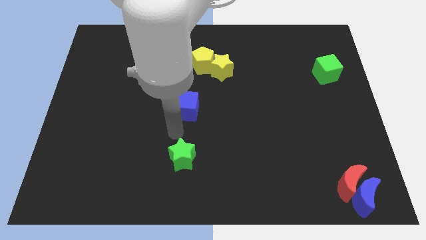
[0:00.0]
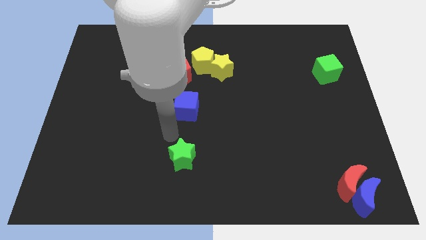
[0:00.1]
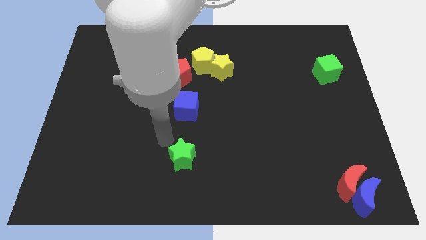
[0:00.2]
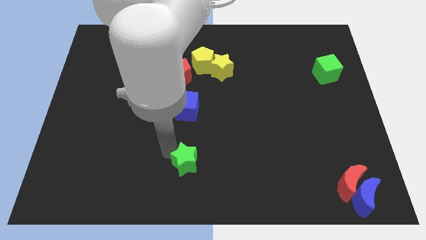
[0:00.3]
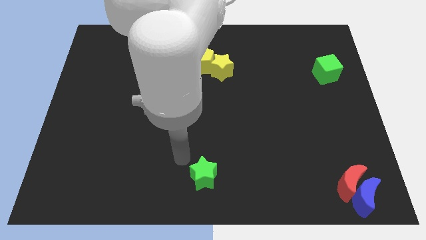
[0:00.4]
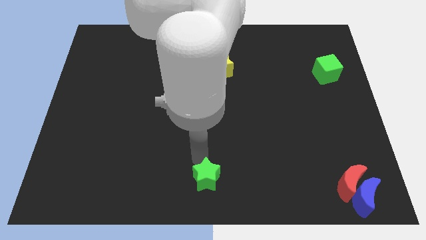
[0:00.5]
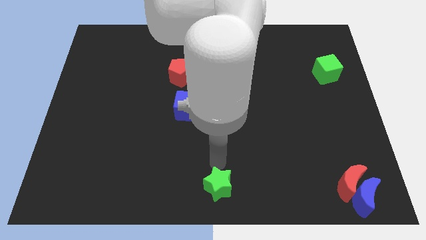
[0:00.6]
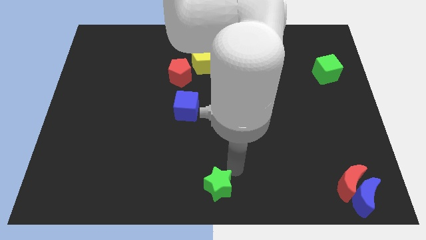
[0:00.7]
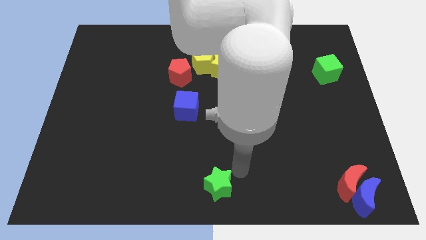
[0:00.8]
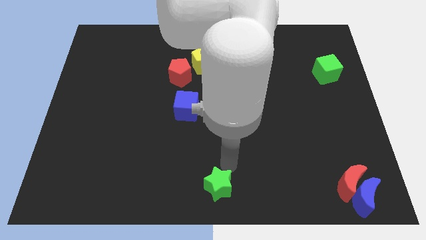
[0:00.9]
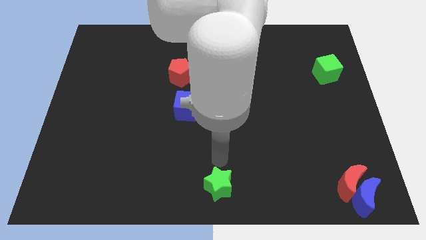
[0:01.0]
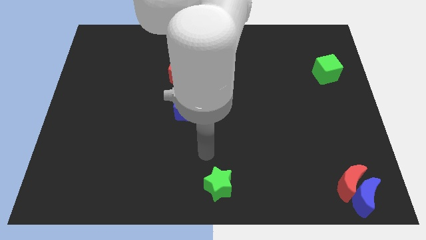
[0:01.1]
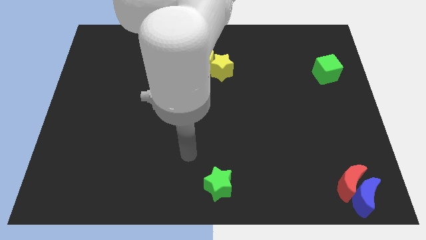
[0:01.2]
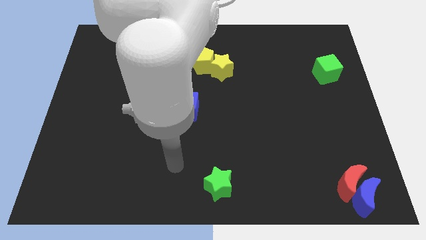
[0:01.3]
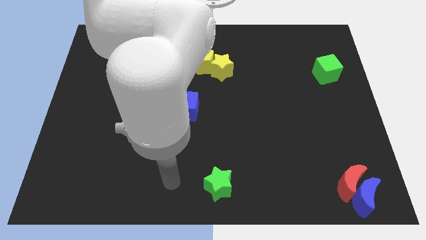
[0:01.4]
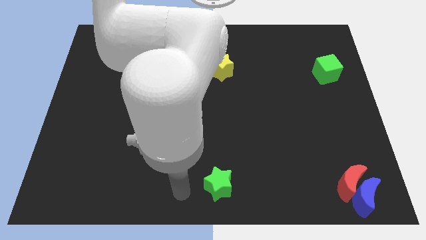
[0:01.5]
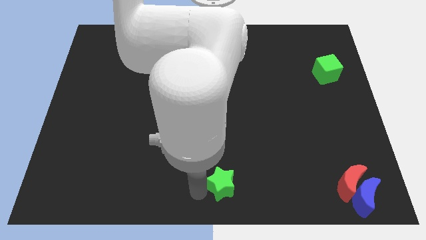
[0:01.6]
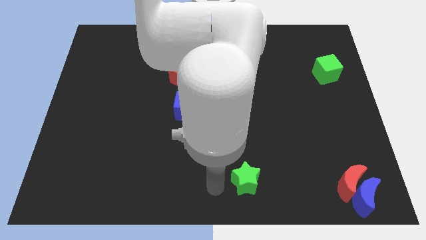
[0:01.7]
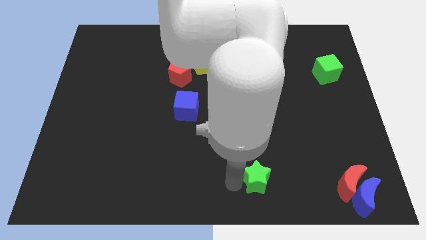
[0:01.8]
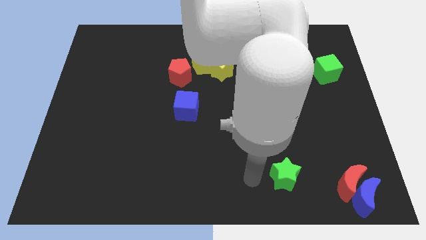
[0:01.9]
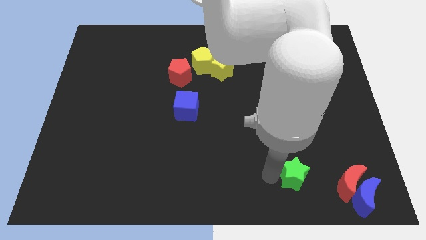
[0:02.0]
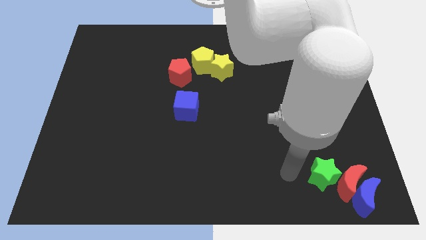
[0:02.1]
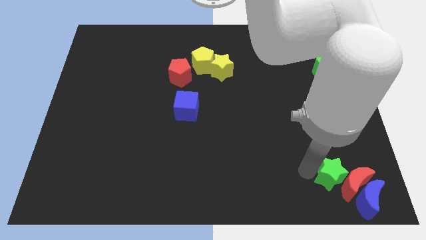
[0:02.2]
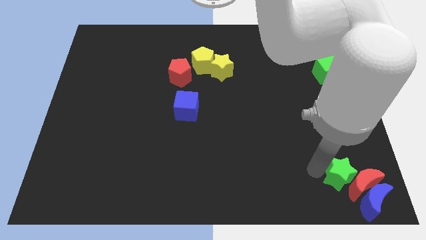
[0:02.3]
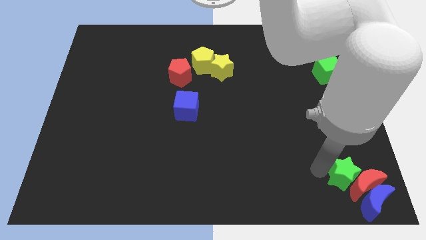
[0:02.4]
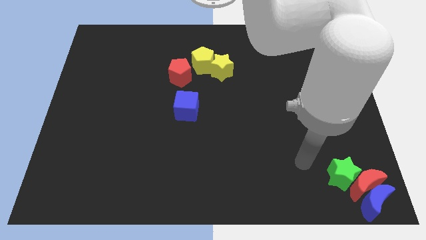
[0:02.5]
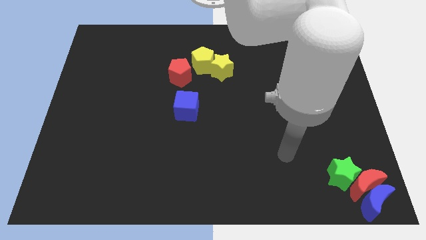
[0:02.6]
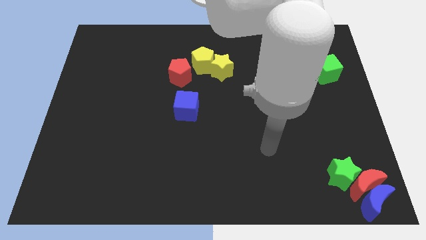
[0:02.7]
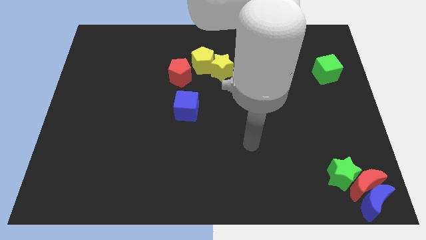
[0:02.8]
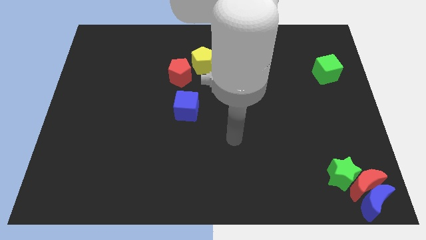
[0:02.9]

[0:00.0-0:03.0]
put the green star red crescent and blue semicircle together

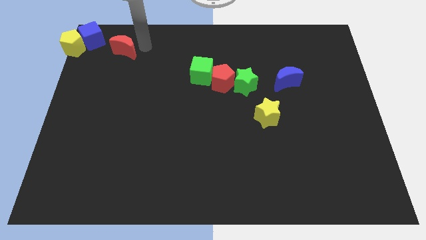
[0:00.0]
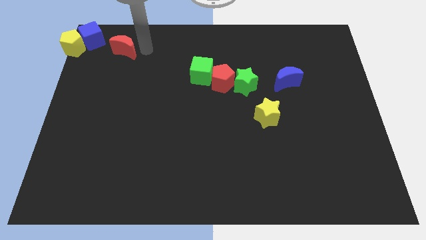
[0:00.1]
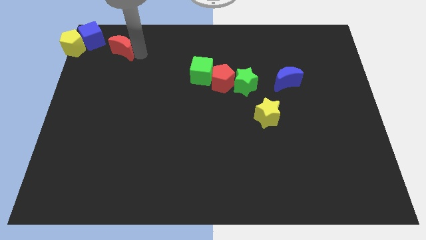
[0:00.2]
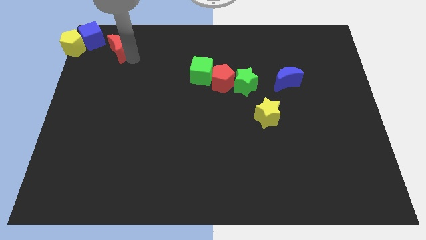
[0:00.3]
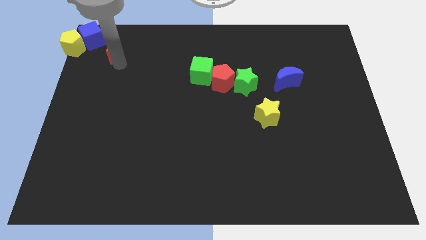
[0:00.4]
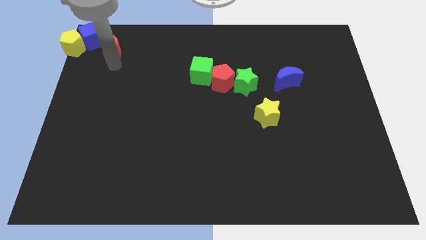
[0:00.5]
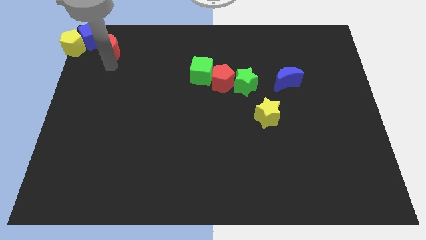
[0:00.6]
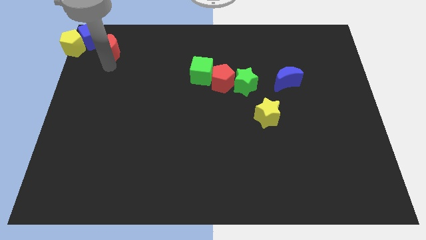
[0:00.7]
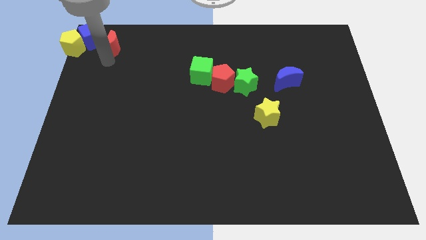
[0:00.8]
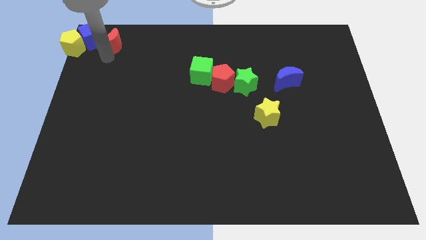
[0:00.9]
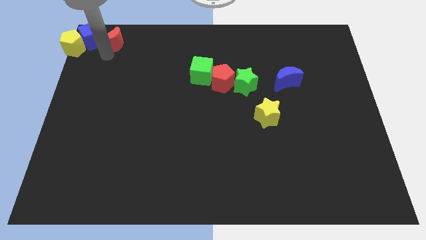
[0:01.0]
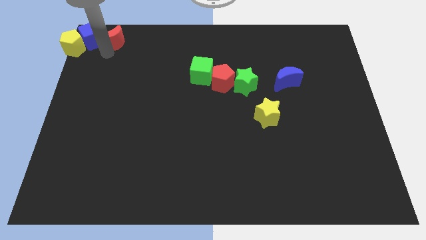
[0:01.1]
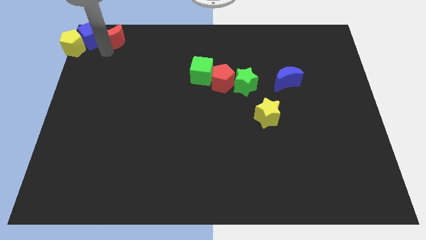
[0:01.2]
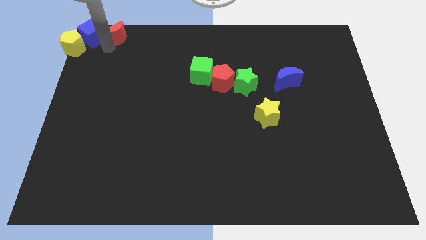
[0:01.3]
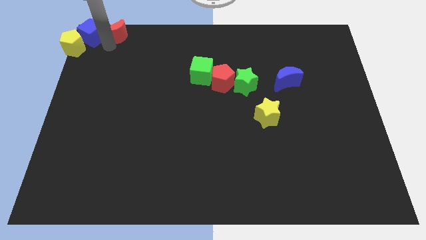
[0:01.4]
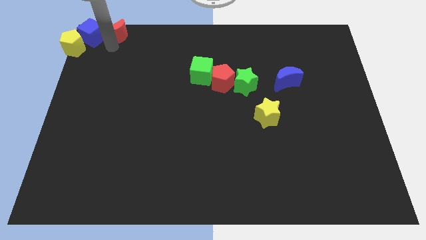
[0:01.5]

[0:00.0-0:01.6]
move the red crescent towards right to the blue cube

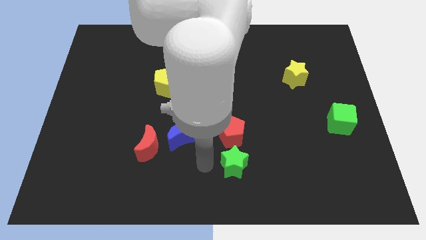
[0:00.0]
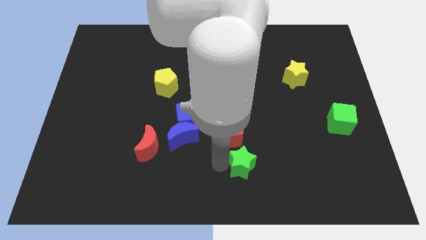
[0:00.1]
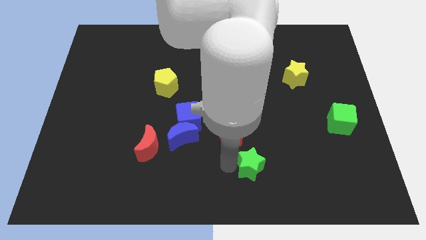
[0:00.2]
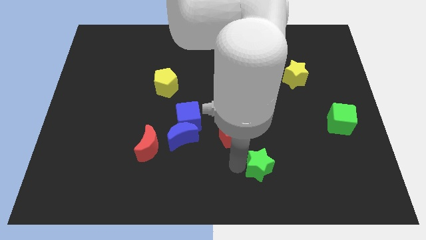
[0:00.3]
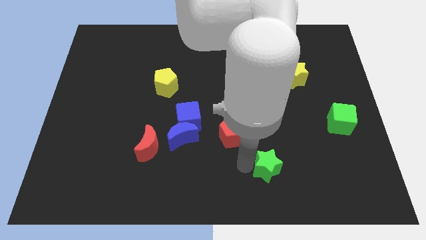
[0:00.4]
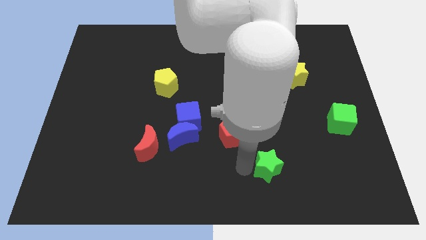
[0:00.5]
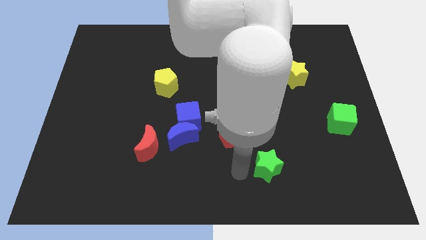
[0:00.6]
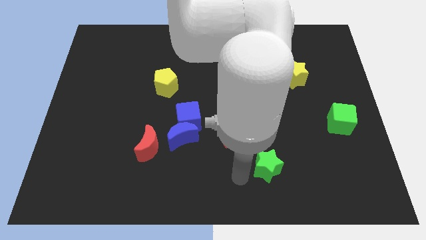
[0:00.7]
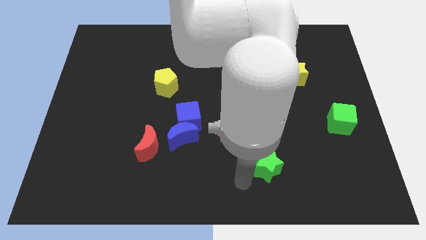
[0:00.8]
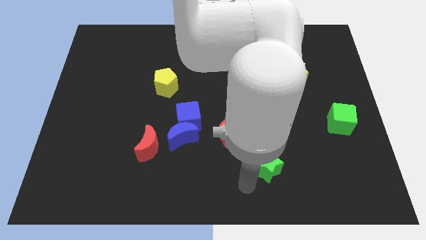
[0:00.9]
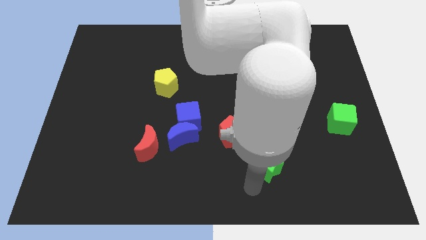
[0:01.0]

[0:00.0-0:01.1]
push green star to the righto of red pentagon

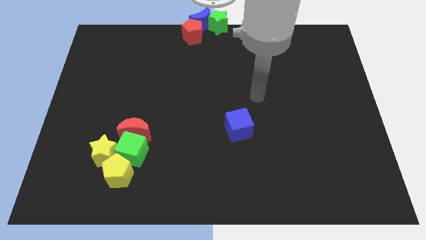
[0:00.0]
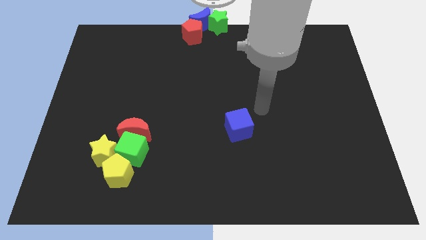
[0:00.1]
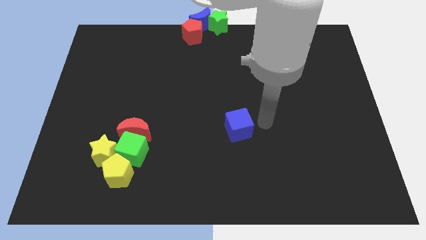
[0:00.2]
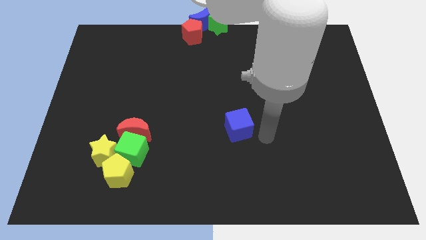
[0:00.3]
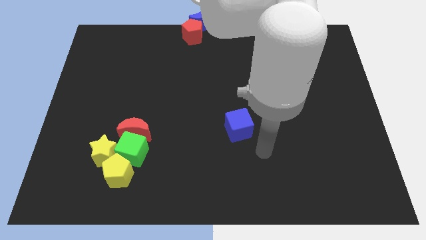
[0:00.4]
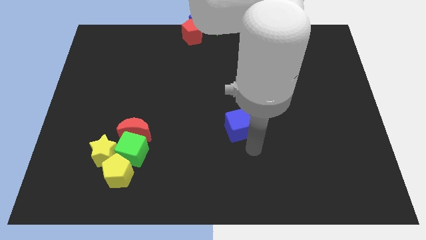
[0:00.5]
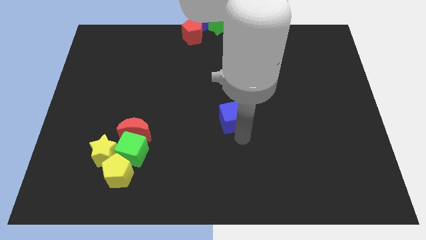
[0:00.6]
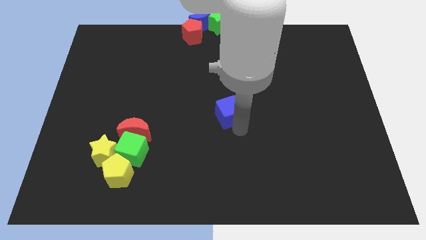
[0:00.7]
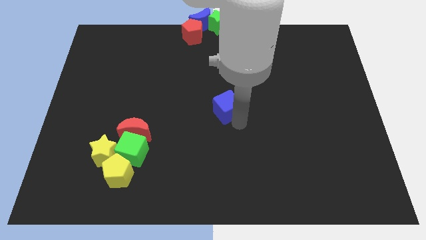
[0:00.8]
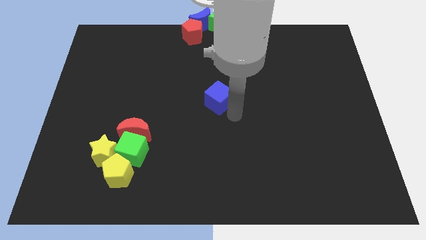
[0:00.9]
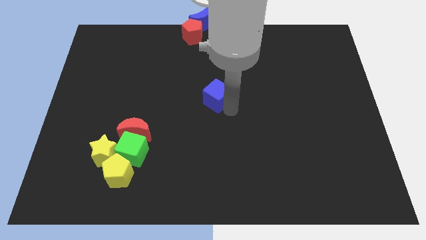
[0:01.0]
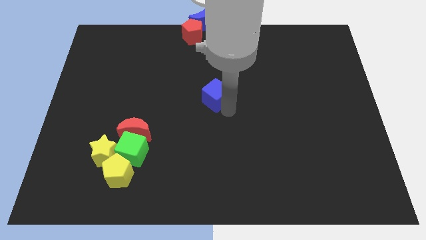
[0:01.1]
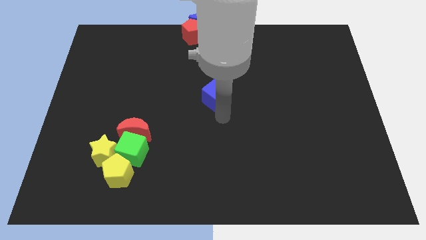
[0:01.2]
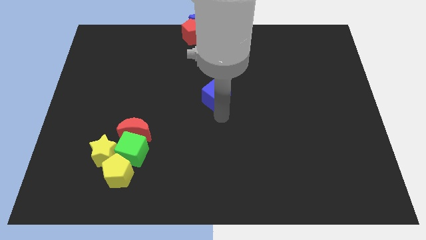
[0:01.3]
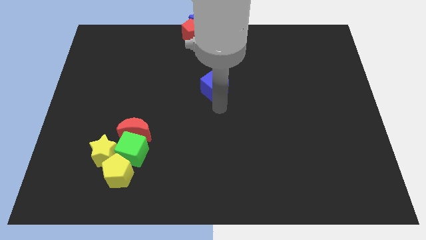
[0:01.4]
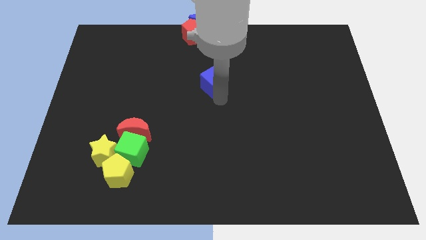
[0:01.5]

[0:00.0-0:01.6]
slide the blue cube towards the top center

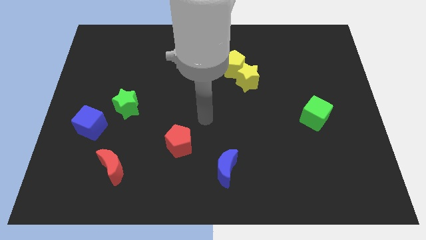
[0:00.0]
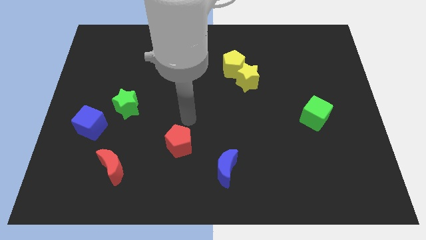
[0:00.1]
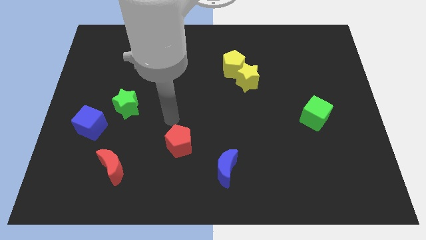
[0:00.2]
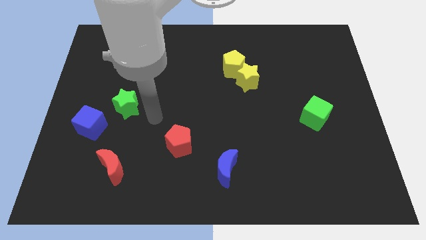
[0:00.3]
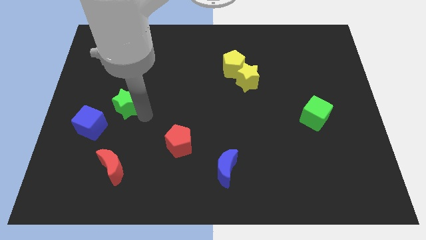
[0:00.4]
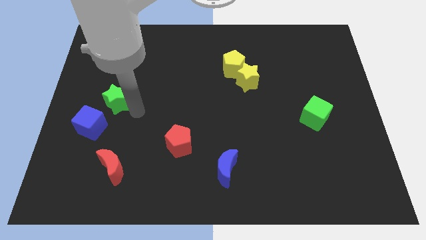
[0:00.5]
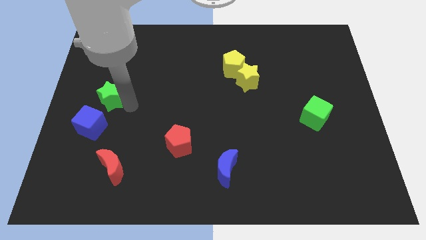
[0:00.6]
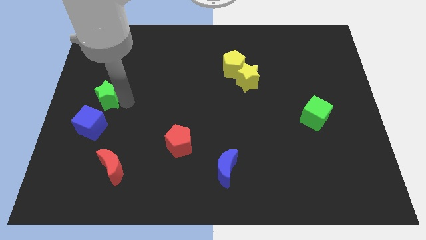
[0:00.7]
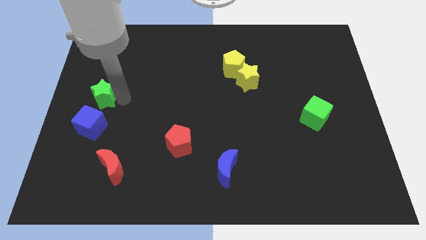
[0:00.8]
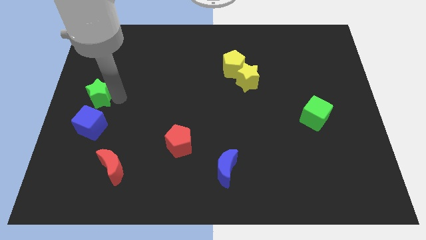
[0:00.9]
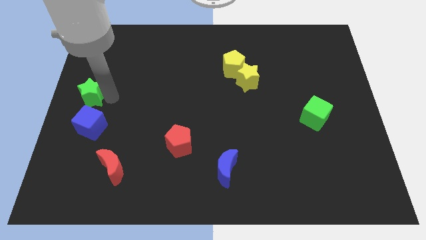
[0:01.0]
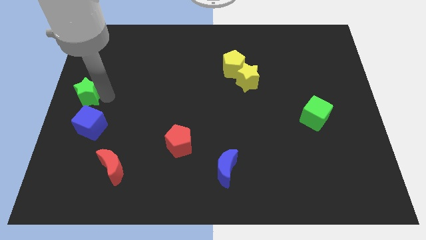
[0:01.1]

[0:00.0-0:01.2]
place green star to the top of blue cube

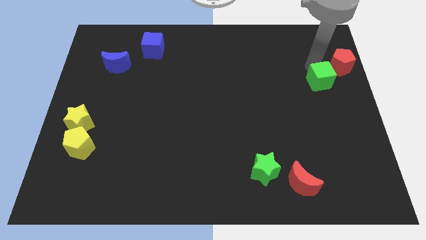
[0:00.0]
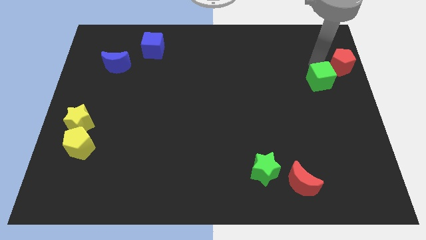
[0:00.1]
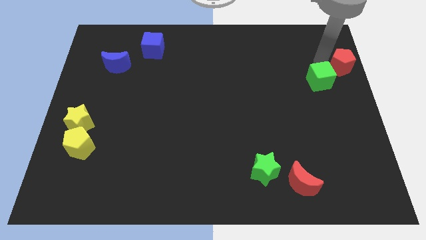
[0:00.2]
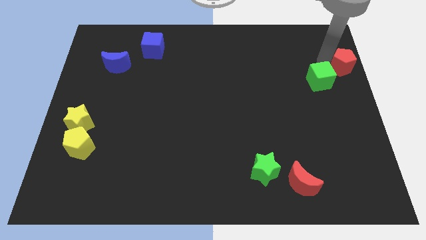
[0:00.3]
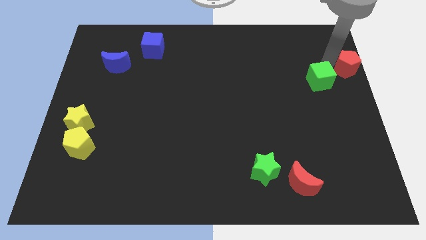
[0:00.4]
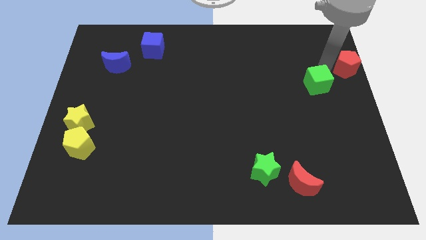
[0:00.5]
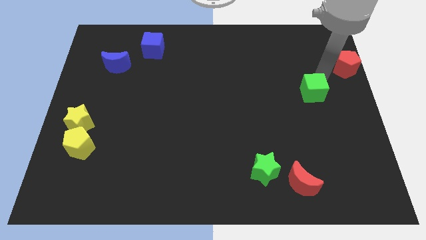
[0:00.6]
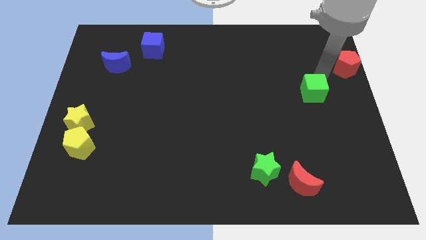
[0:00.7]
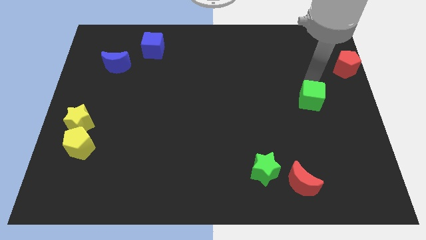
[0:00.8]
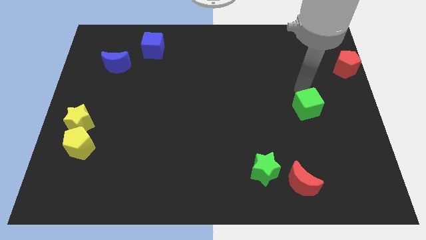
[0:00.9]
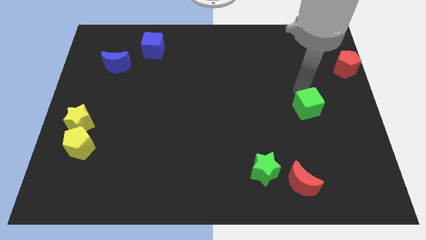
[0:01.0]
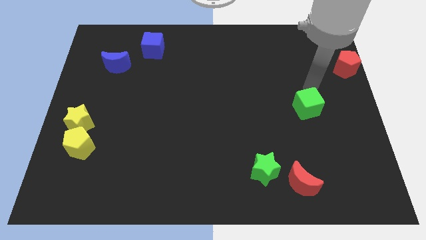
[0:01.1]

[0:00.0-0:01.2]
place the green cube diagonal to the red pentagon
